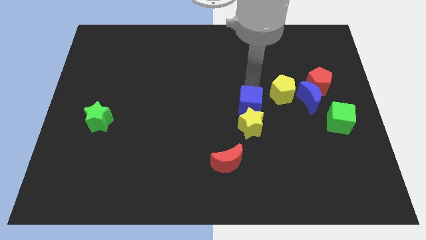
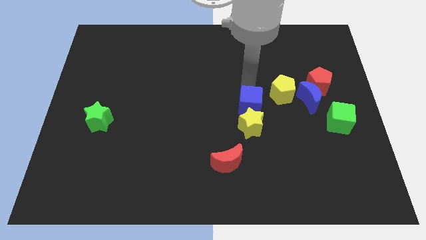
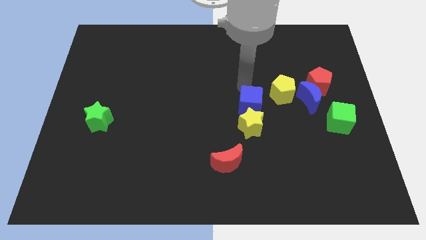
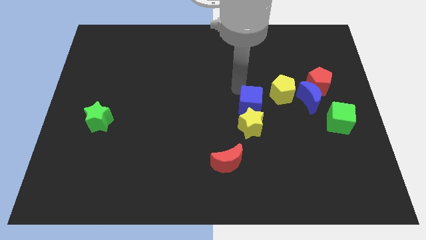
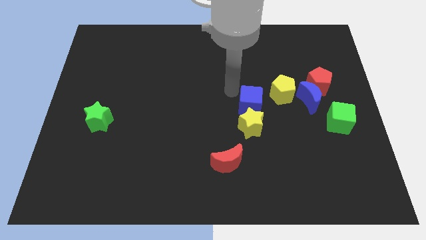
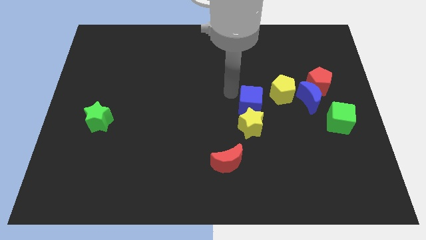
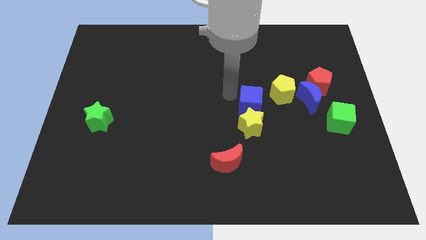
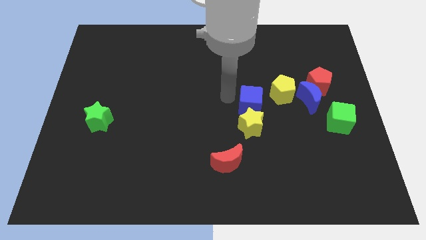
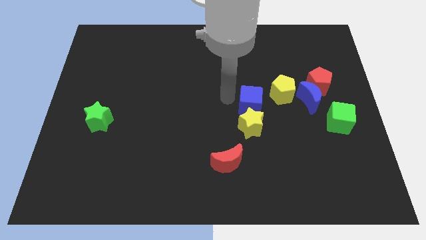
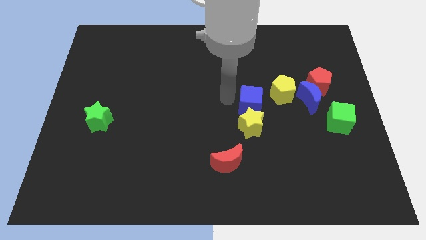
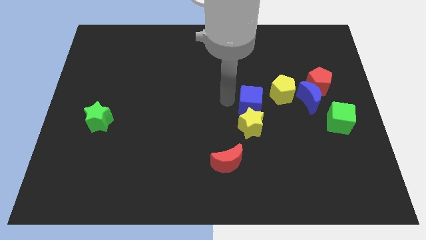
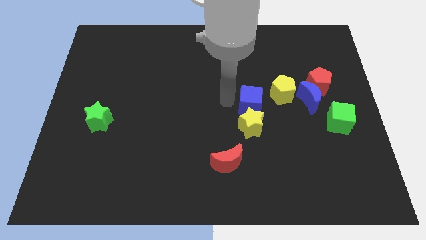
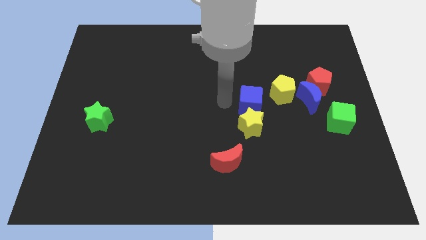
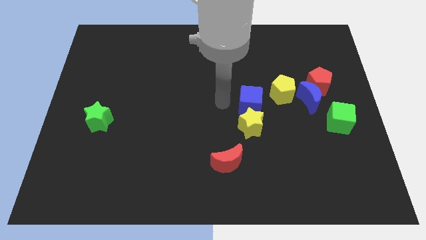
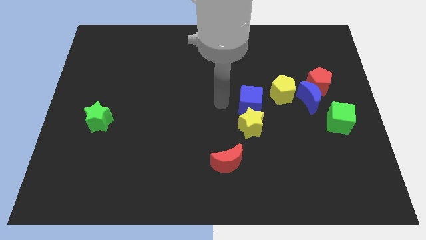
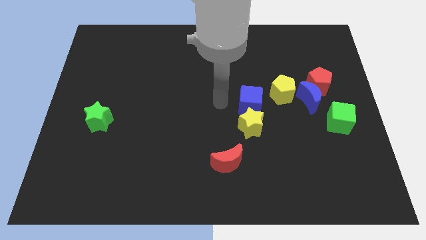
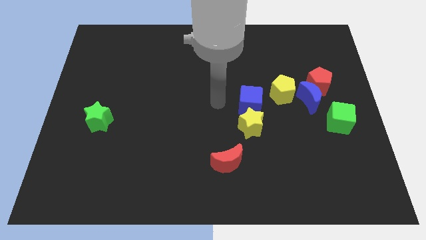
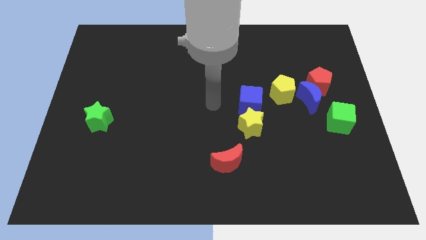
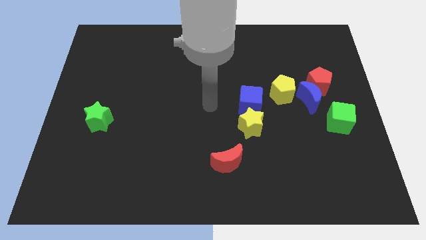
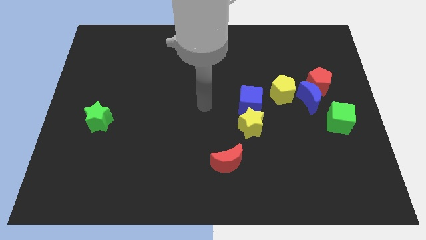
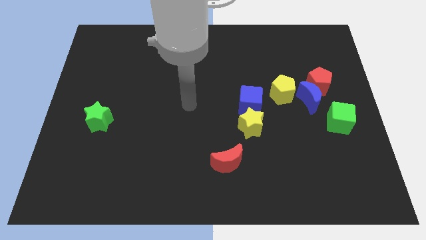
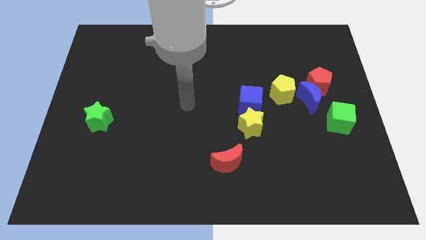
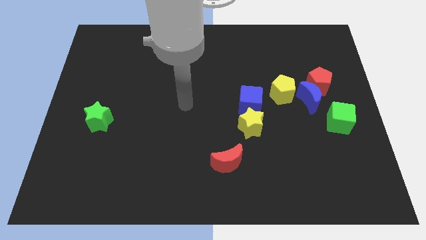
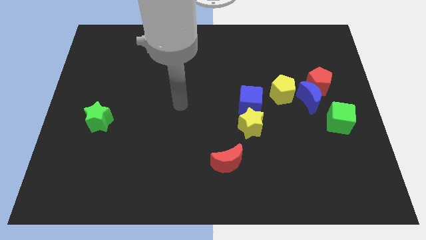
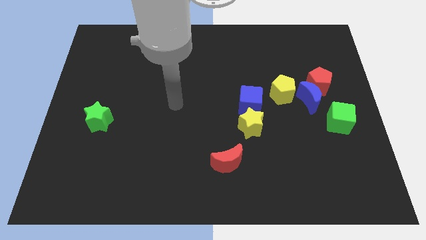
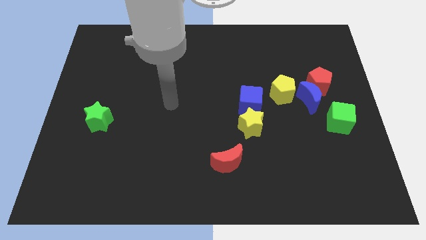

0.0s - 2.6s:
place your arm in between the blue cube and the green star

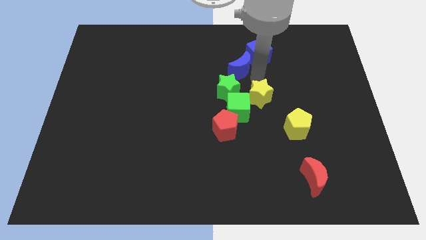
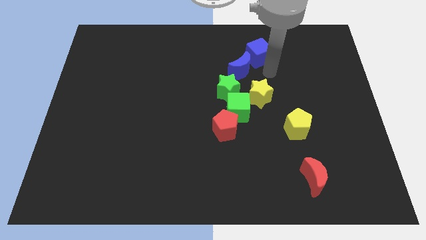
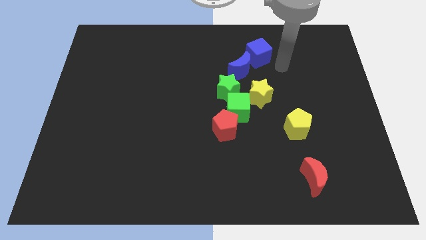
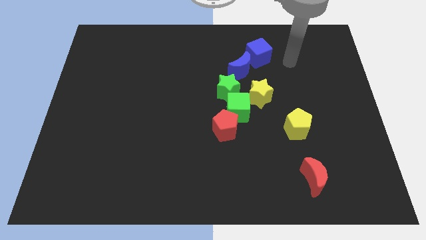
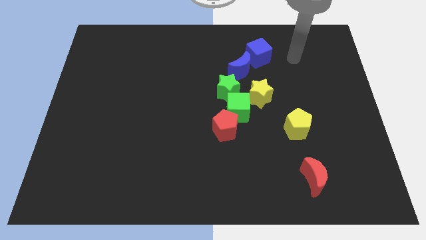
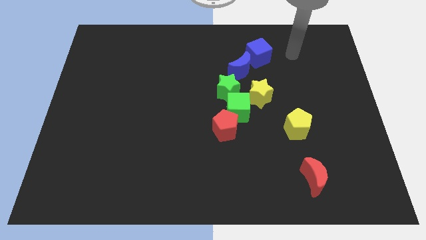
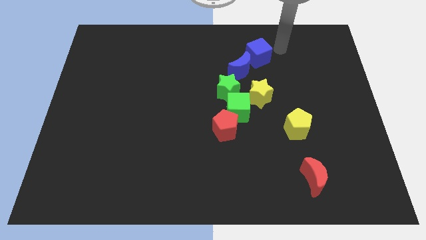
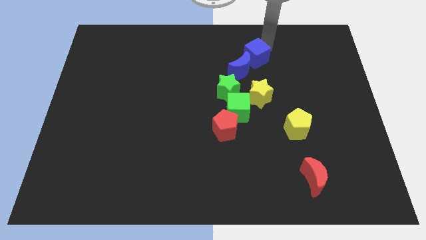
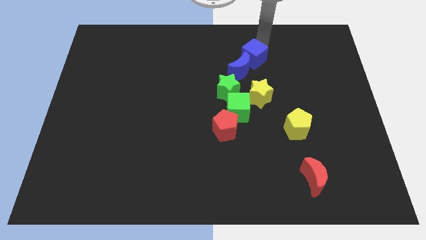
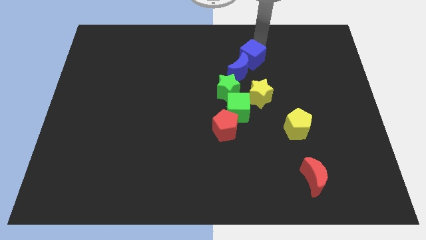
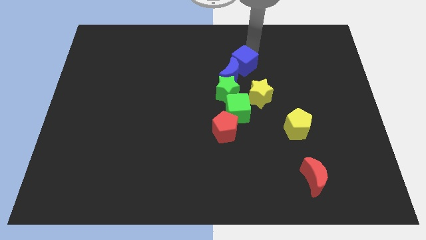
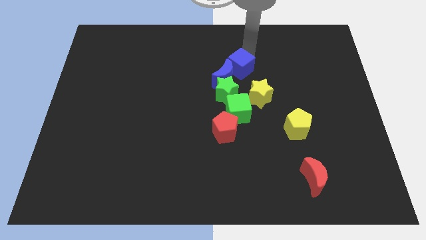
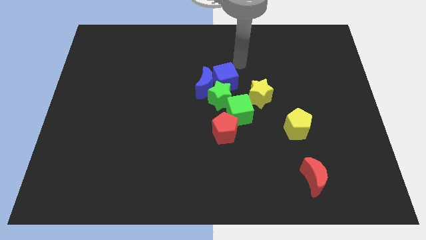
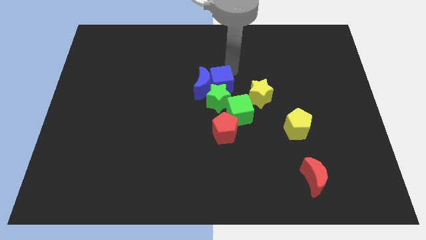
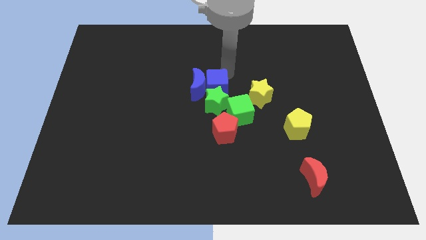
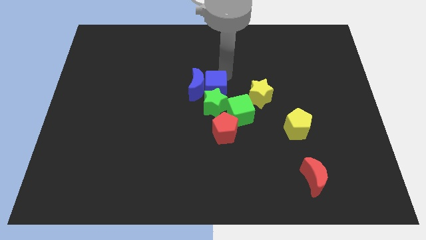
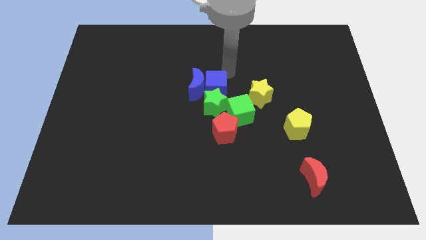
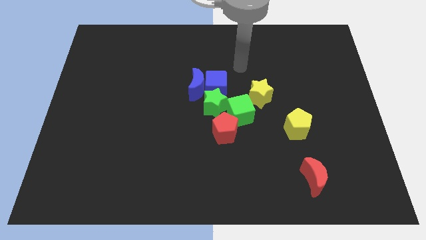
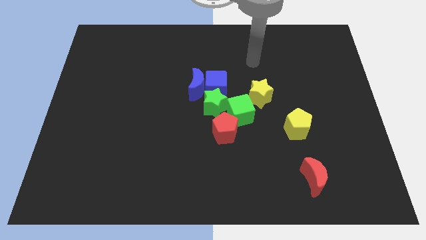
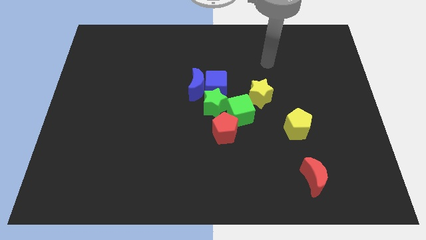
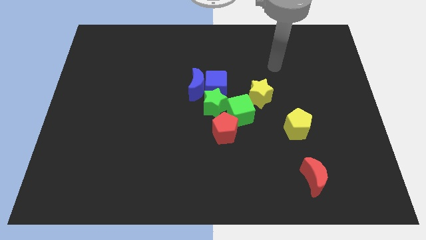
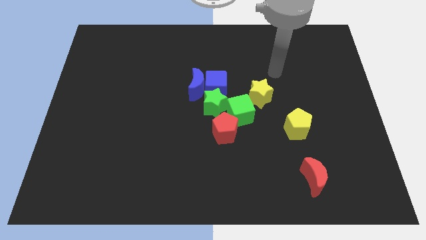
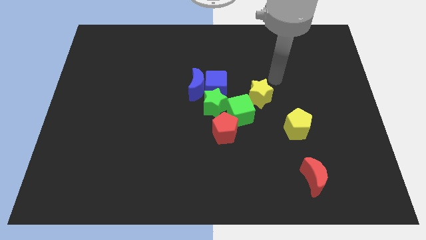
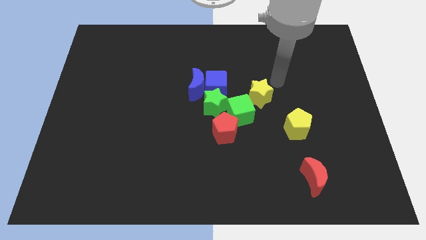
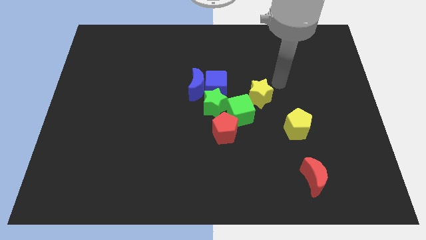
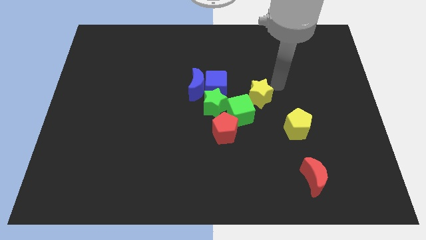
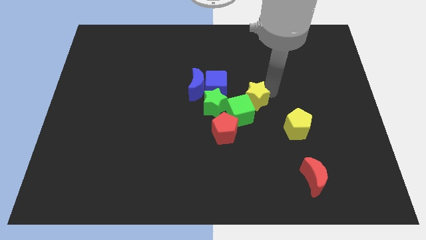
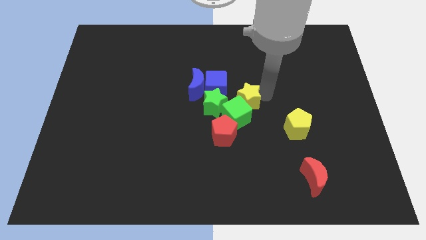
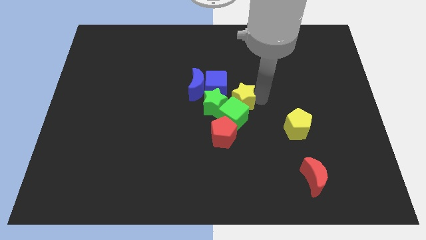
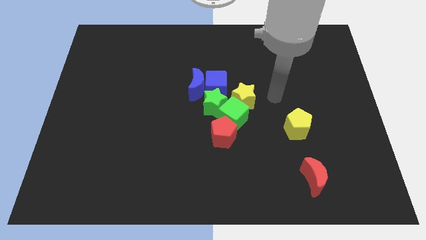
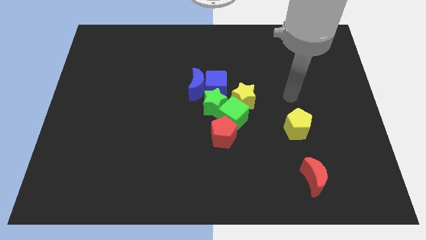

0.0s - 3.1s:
push the blue blocks into green star

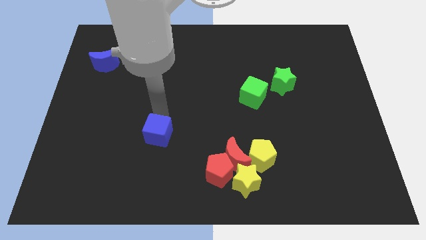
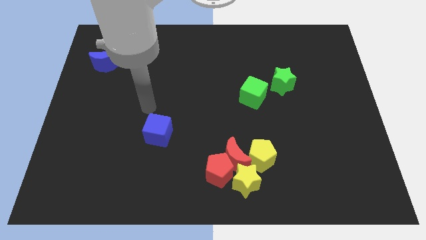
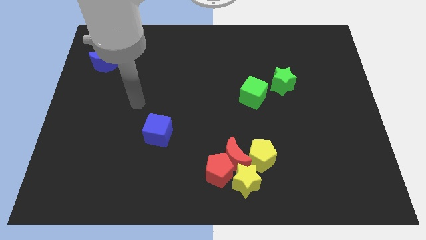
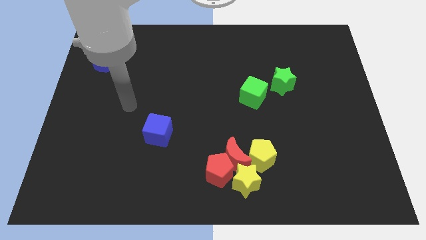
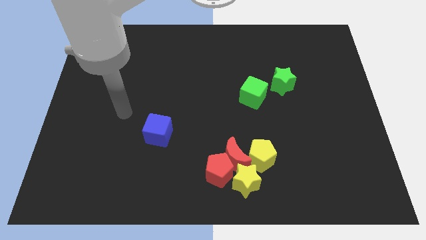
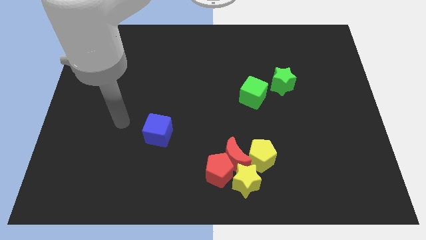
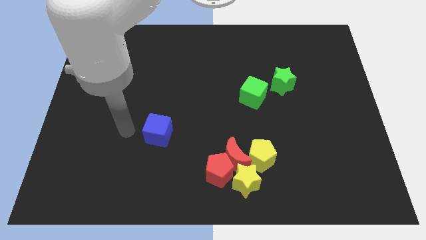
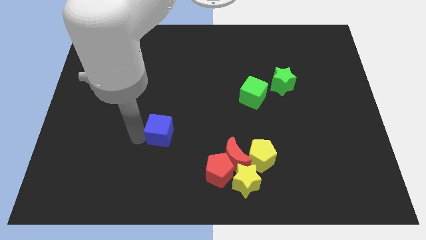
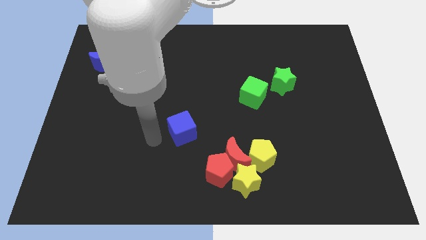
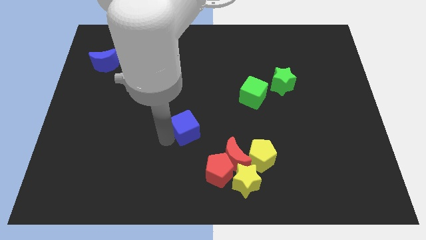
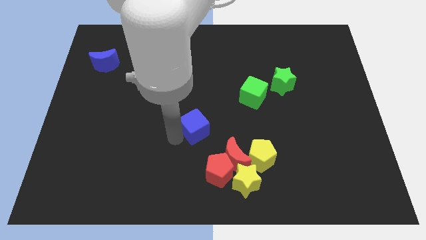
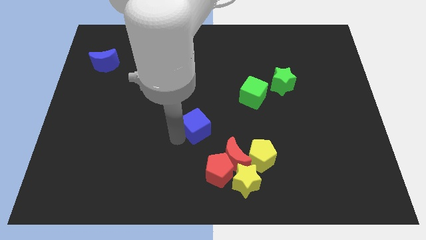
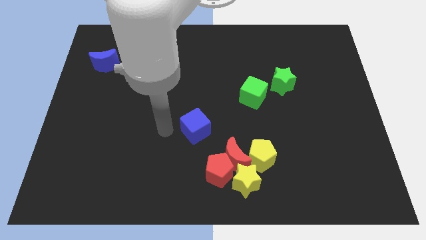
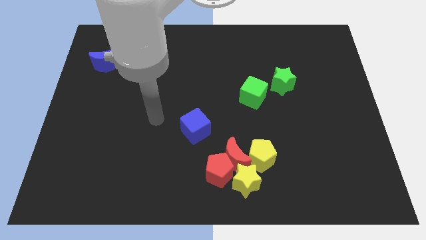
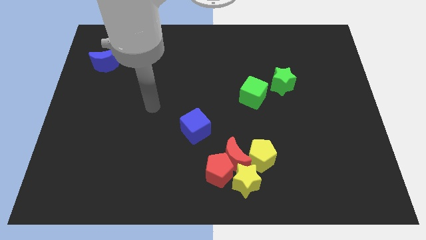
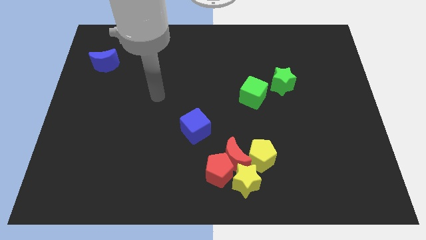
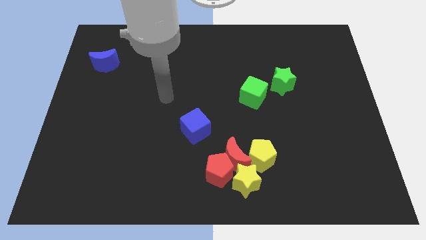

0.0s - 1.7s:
move the blue cube towards right of the board

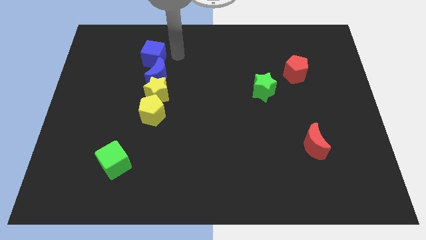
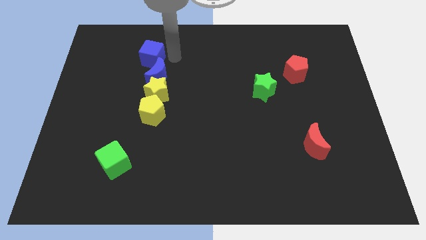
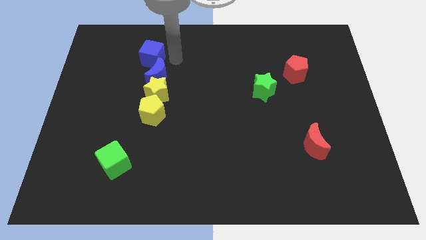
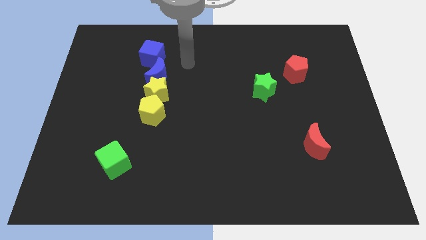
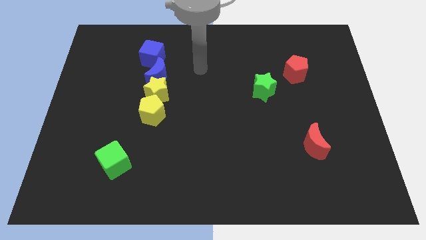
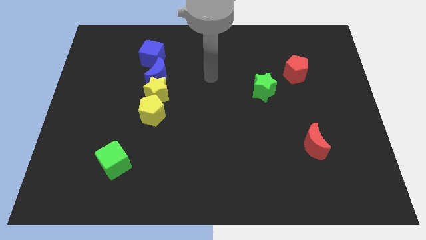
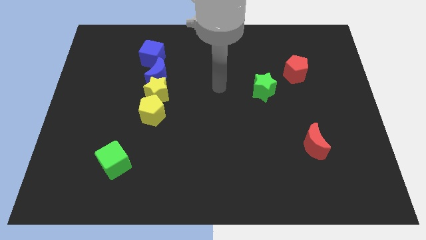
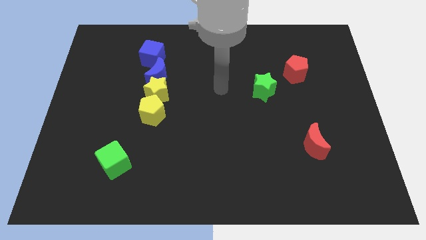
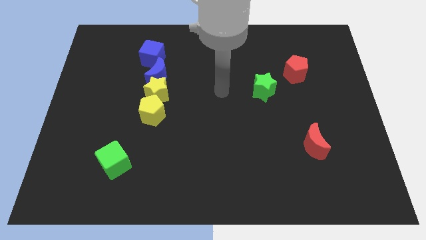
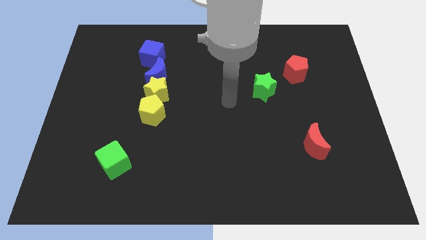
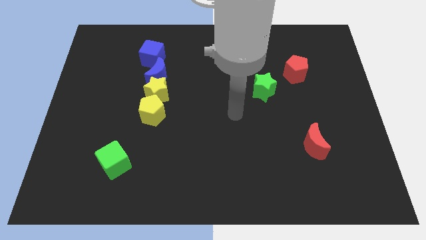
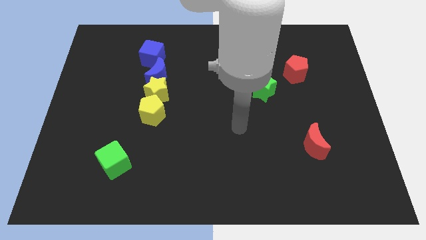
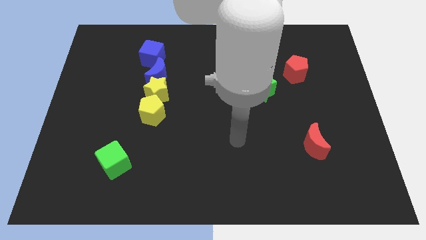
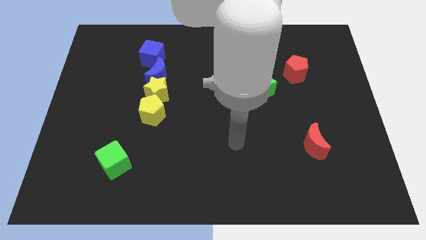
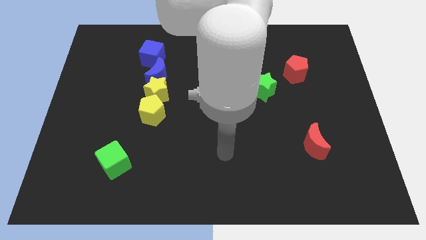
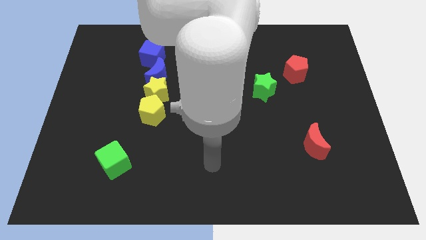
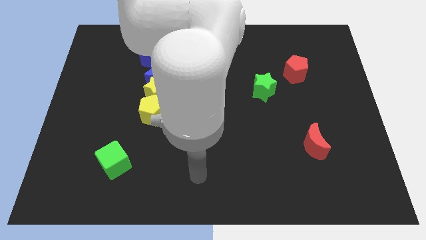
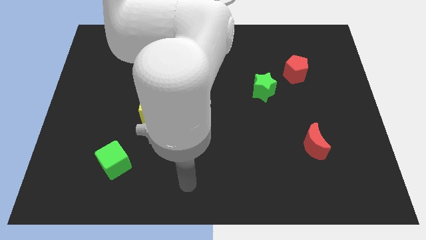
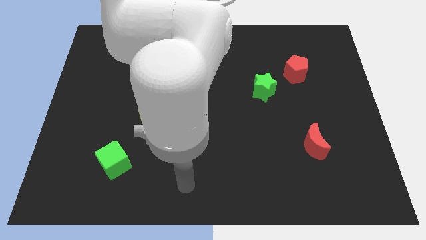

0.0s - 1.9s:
move blue cube slightly to the left
